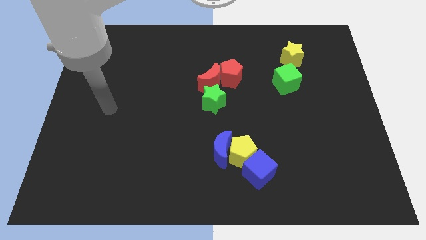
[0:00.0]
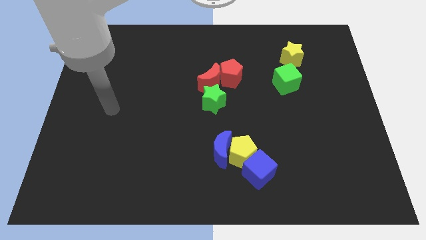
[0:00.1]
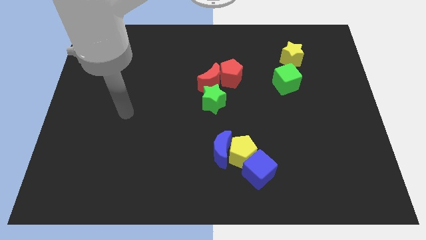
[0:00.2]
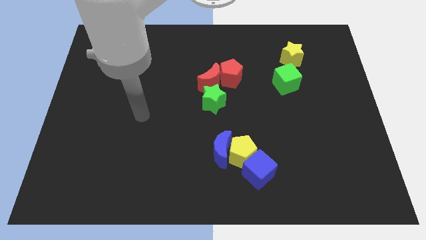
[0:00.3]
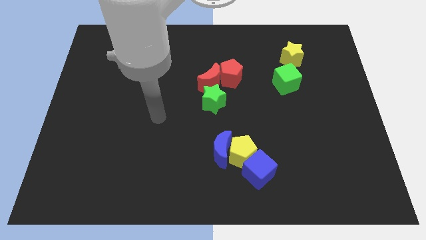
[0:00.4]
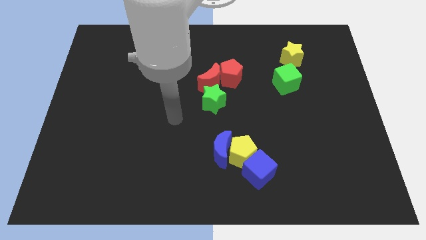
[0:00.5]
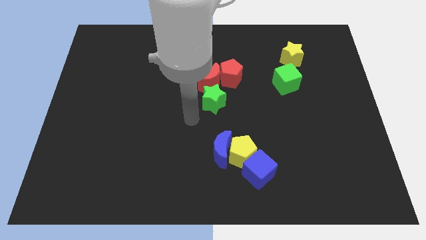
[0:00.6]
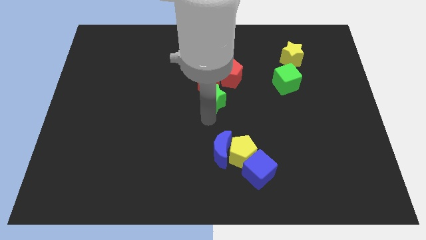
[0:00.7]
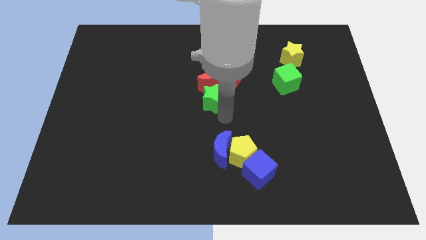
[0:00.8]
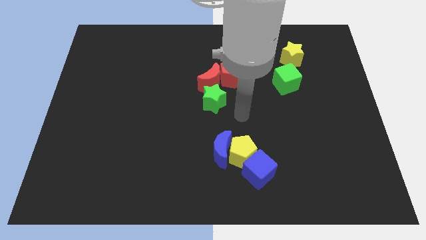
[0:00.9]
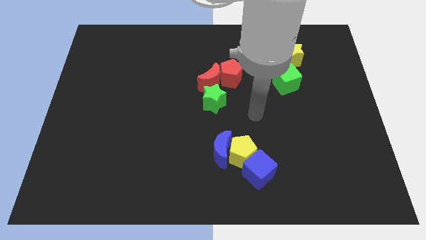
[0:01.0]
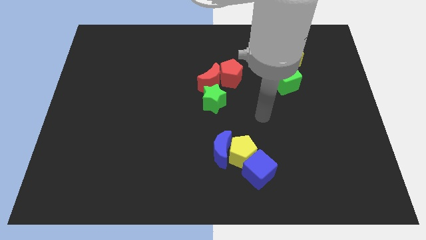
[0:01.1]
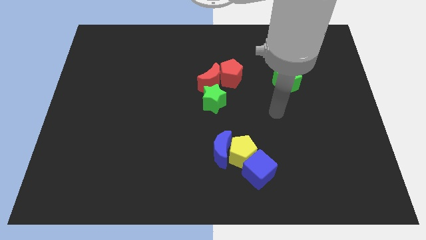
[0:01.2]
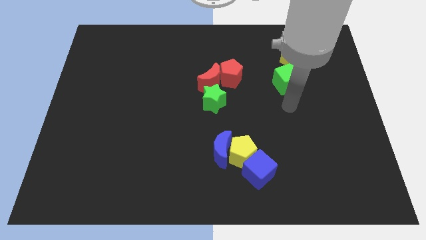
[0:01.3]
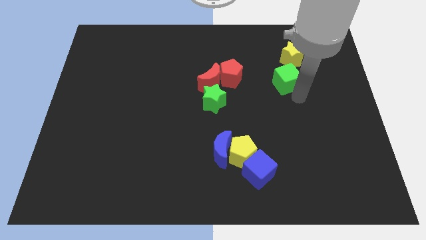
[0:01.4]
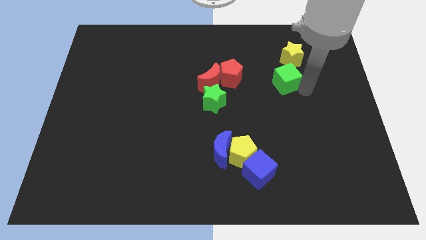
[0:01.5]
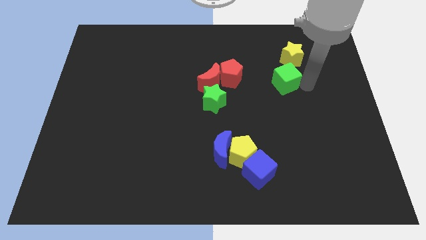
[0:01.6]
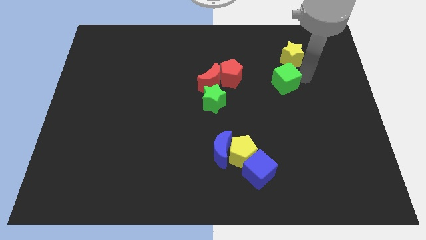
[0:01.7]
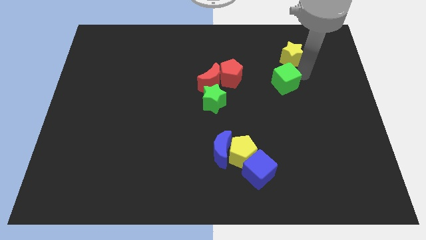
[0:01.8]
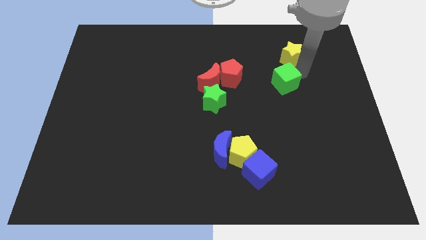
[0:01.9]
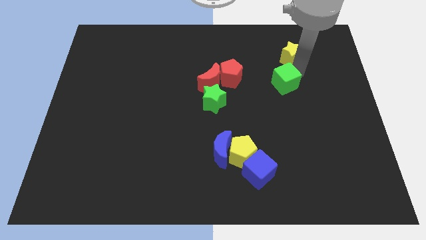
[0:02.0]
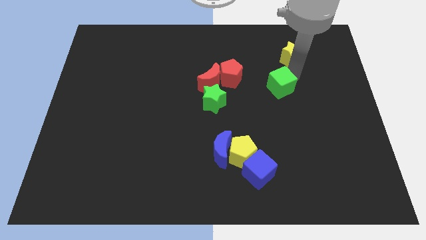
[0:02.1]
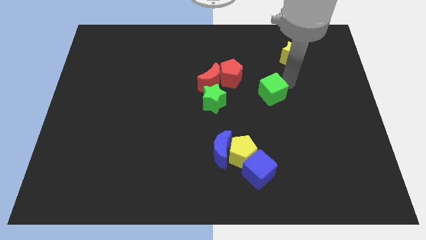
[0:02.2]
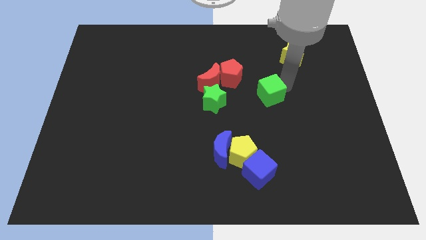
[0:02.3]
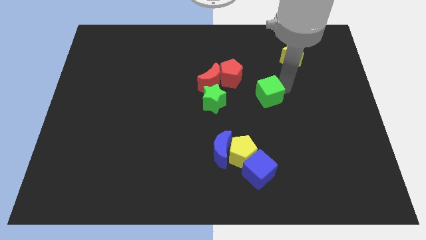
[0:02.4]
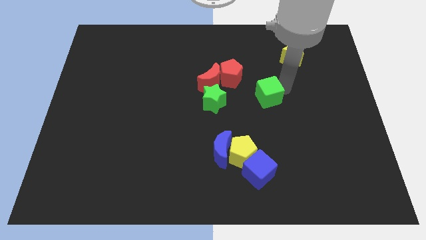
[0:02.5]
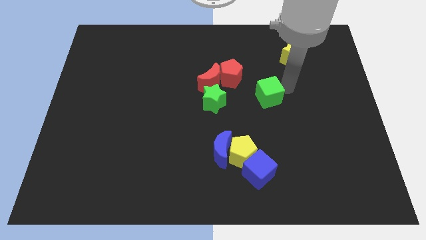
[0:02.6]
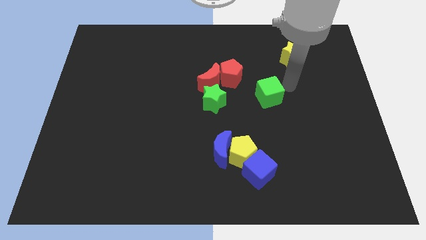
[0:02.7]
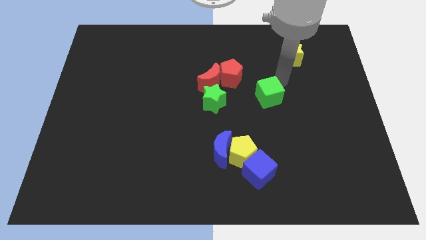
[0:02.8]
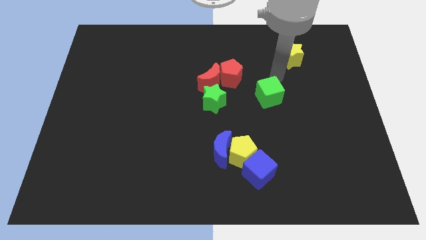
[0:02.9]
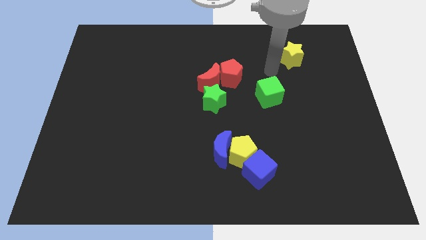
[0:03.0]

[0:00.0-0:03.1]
slide green cube to right of green star

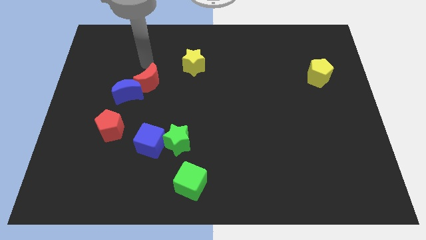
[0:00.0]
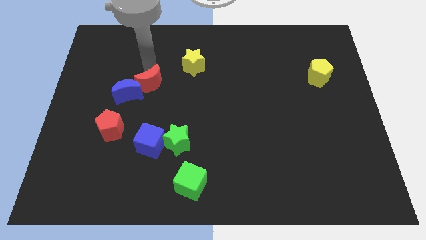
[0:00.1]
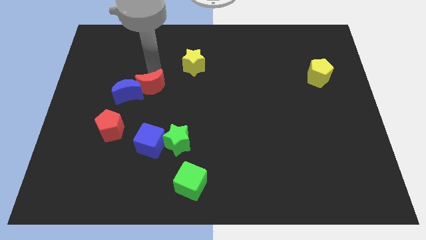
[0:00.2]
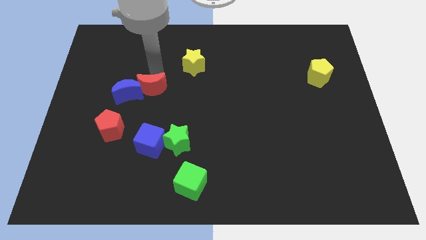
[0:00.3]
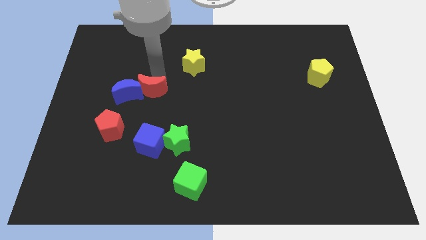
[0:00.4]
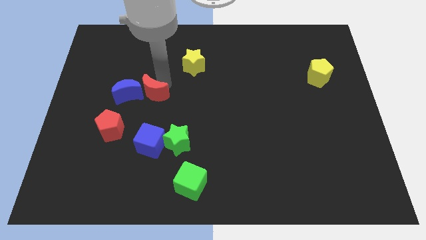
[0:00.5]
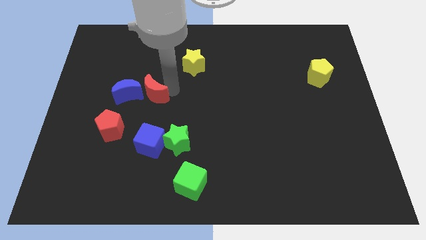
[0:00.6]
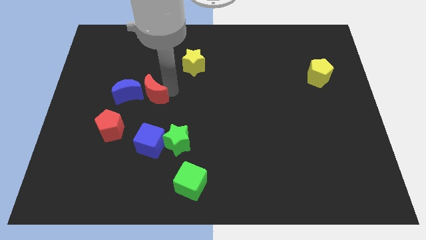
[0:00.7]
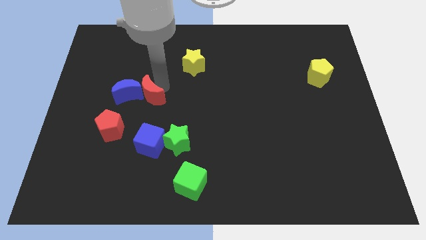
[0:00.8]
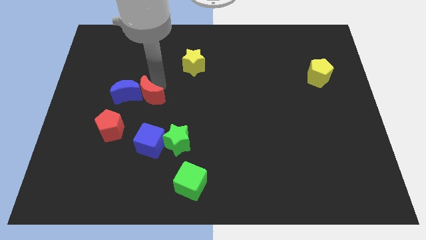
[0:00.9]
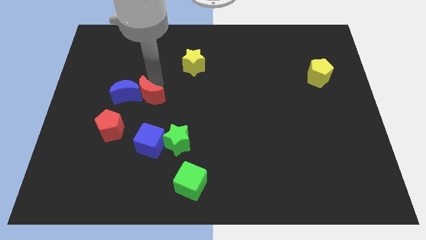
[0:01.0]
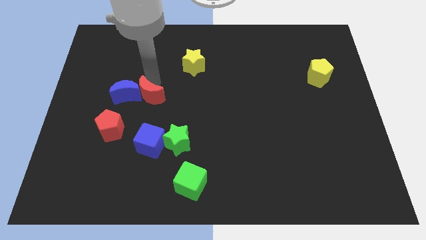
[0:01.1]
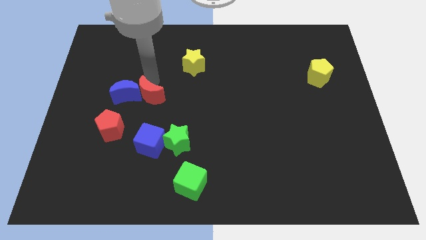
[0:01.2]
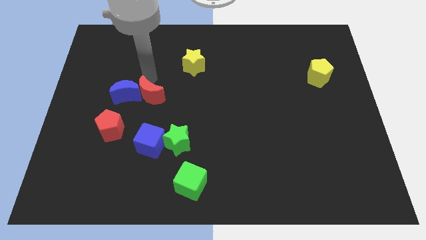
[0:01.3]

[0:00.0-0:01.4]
slightly push the red crescent to the right side of the blue crescent

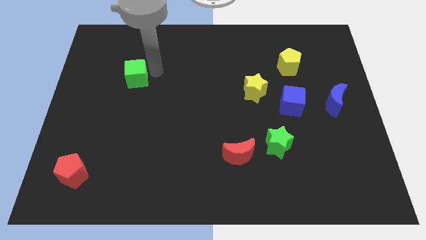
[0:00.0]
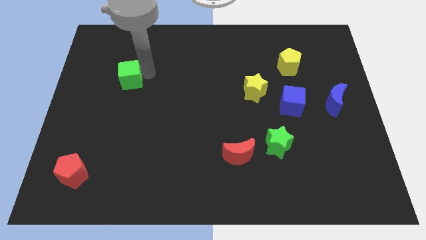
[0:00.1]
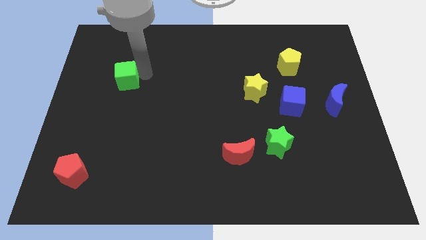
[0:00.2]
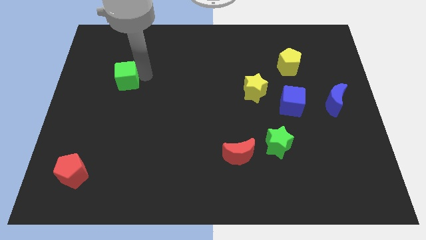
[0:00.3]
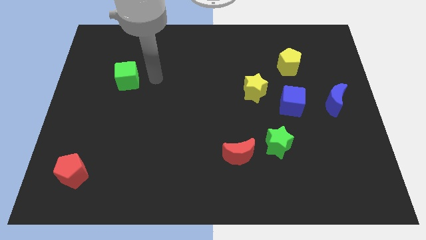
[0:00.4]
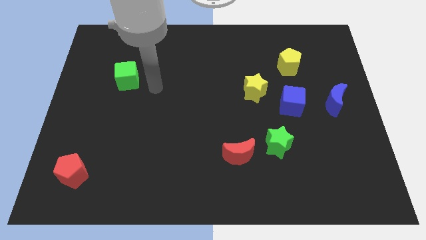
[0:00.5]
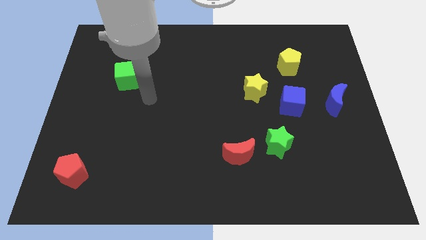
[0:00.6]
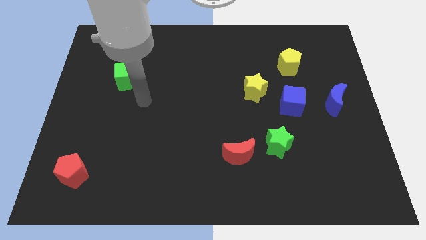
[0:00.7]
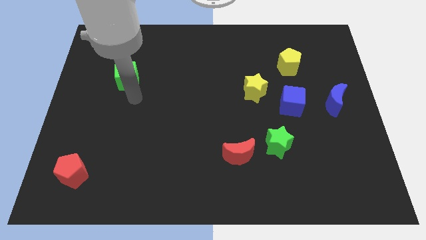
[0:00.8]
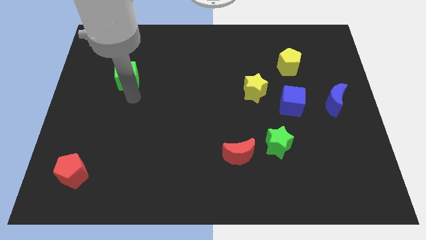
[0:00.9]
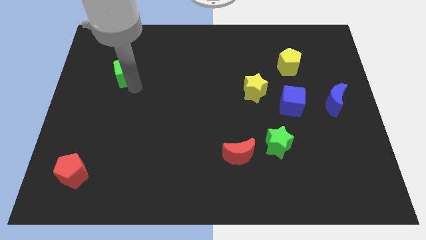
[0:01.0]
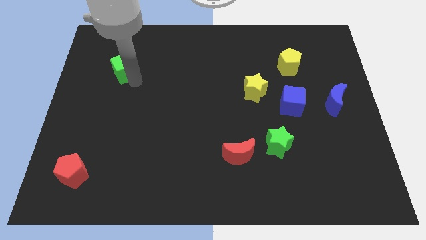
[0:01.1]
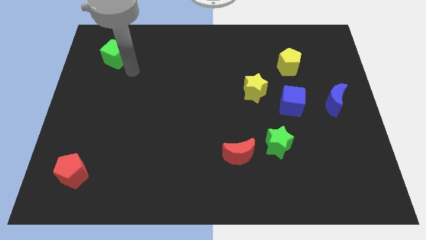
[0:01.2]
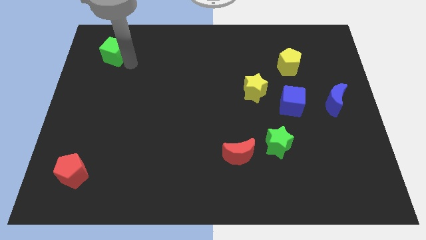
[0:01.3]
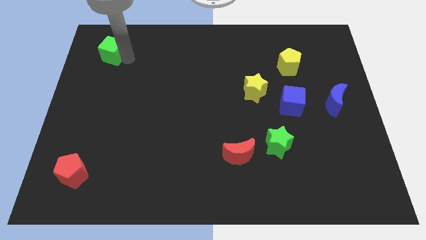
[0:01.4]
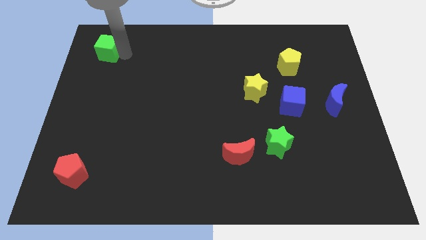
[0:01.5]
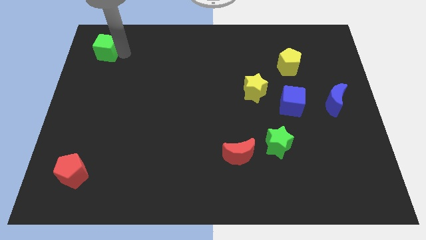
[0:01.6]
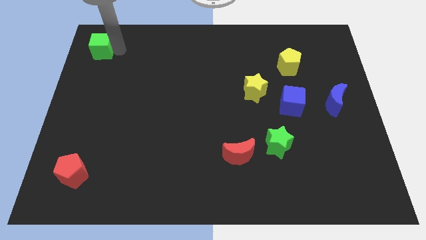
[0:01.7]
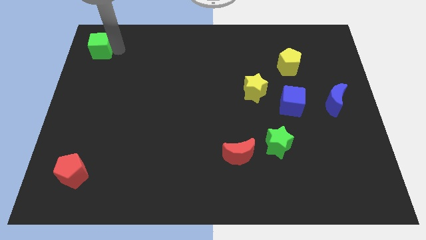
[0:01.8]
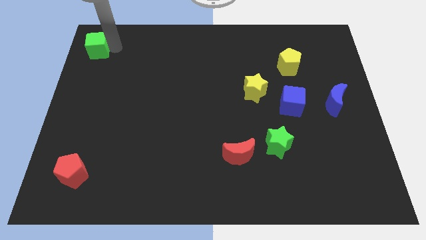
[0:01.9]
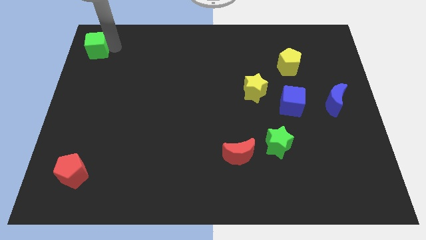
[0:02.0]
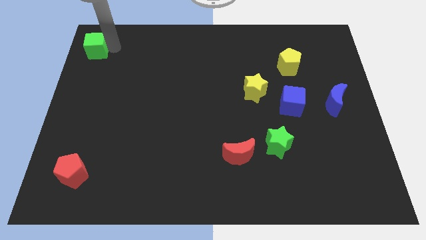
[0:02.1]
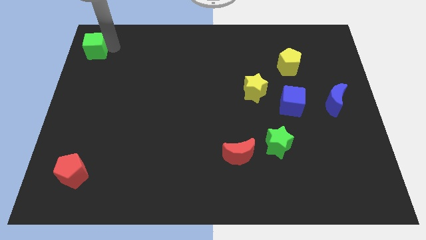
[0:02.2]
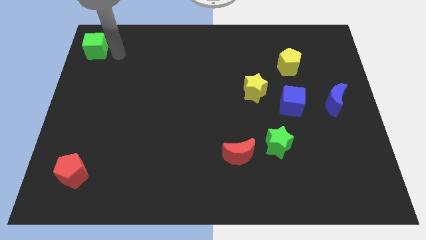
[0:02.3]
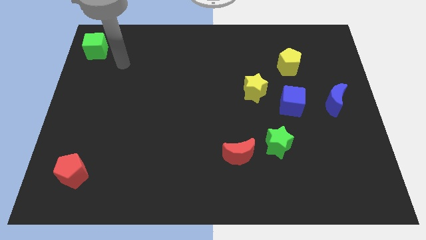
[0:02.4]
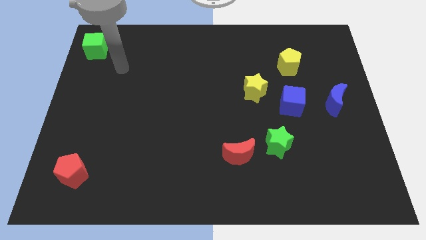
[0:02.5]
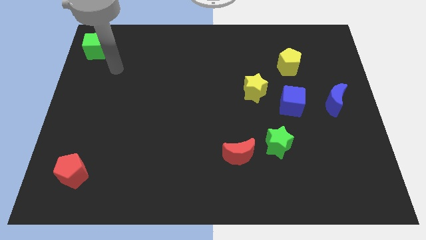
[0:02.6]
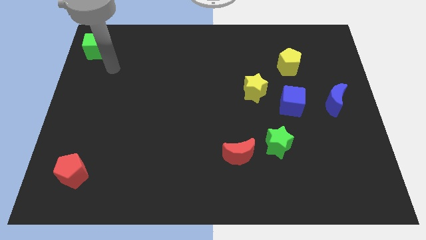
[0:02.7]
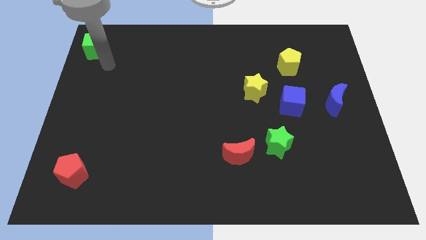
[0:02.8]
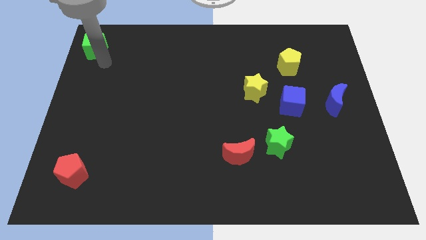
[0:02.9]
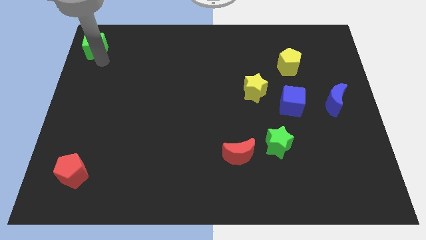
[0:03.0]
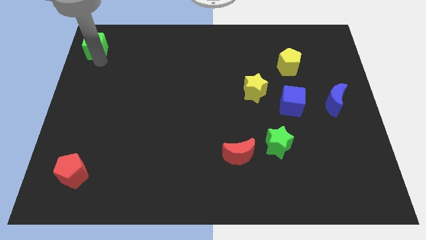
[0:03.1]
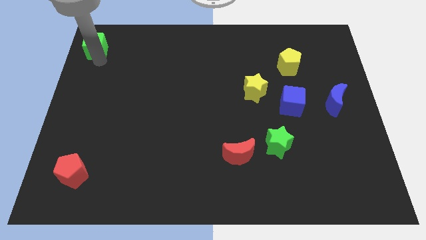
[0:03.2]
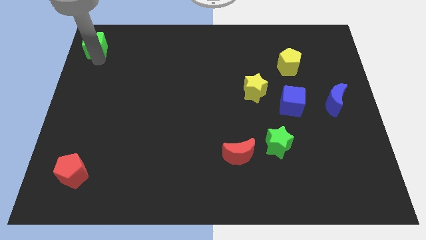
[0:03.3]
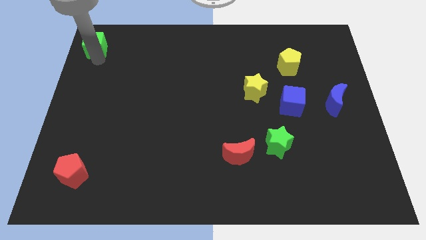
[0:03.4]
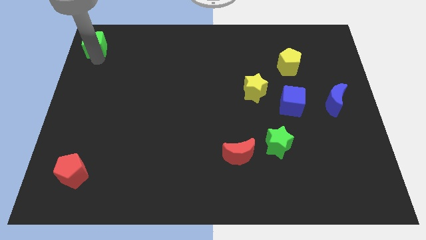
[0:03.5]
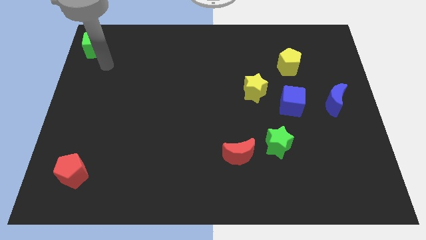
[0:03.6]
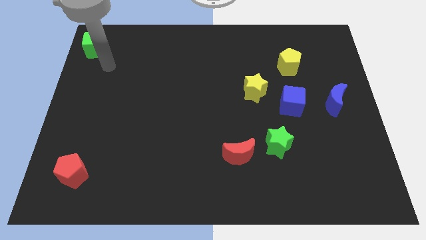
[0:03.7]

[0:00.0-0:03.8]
move the green cube to the top left corner of the board

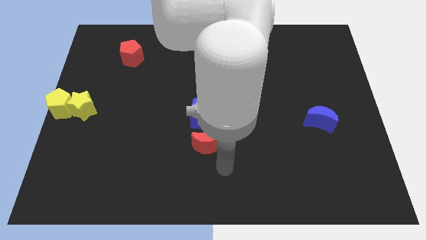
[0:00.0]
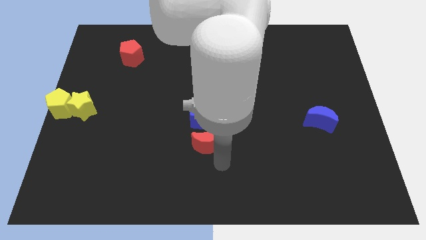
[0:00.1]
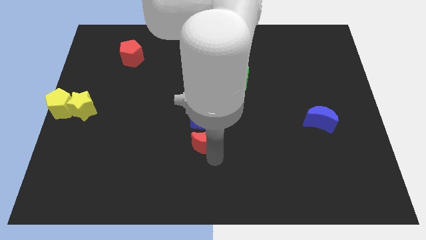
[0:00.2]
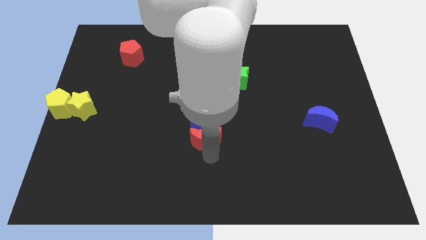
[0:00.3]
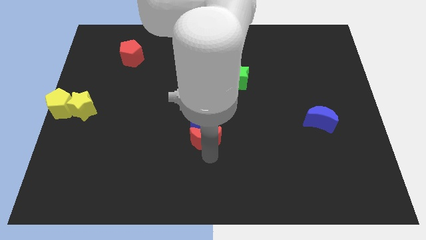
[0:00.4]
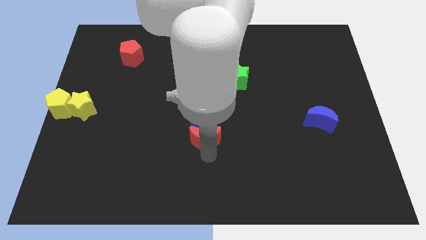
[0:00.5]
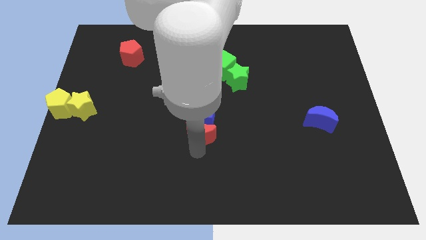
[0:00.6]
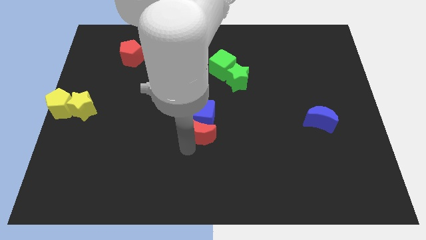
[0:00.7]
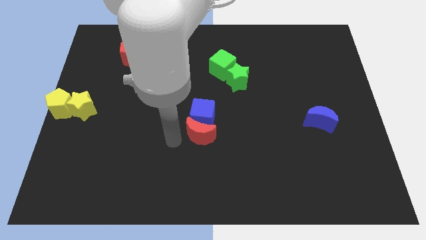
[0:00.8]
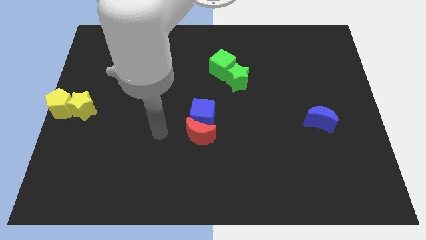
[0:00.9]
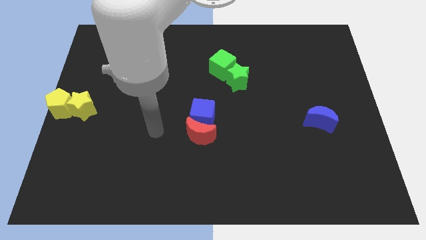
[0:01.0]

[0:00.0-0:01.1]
push the red crescent close to the blue cube
